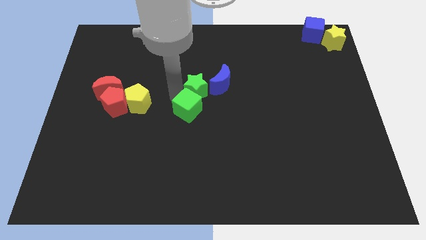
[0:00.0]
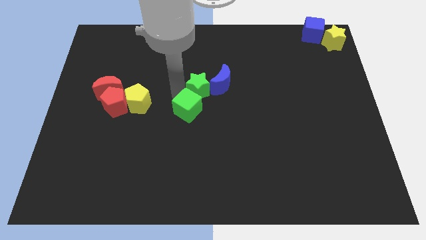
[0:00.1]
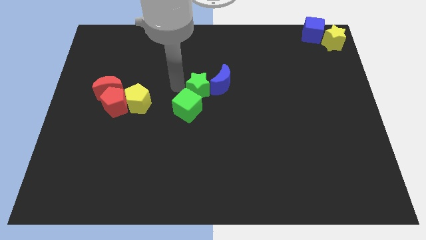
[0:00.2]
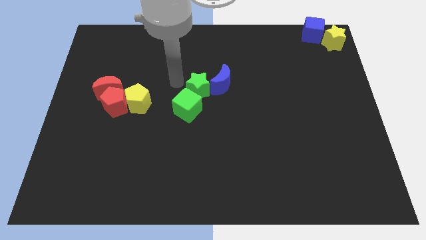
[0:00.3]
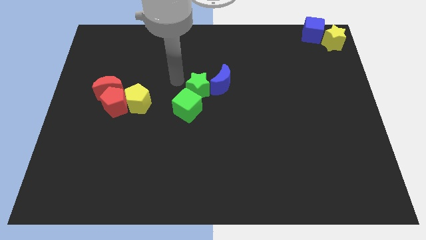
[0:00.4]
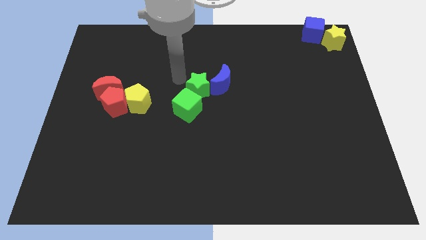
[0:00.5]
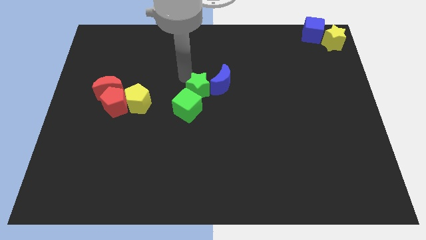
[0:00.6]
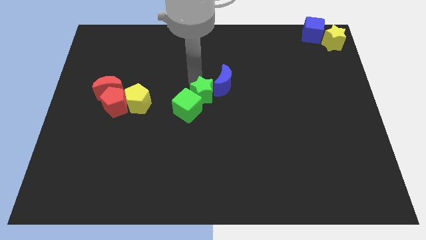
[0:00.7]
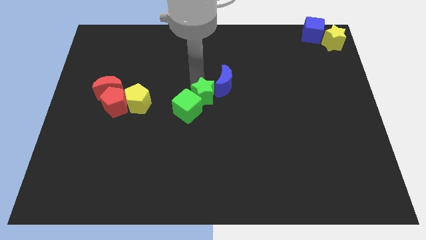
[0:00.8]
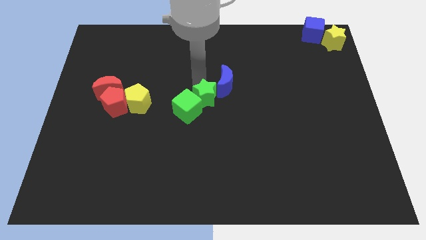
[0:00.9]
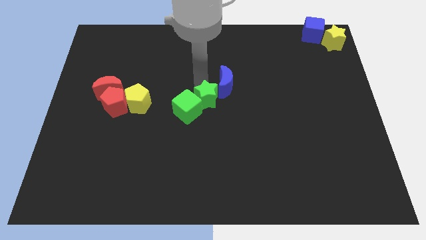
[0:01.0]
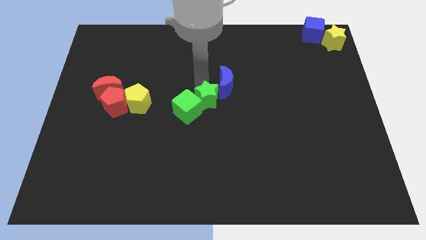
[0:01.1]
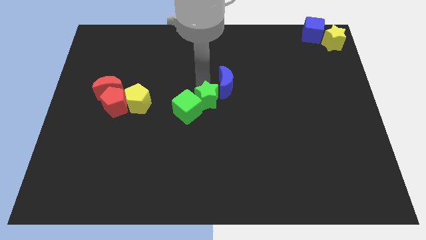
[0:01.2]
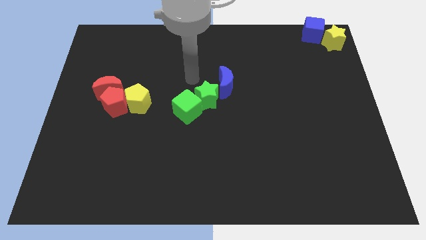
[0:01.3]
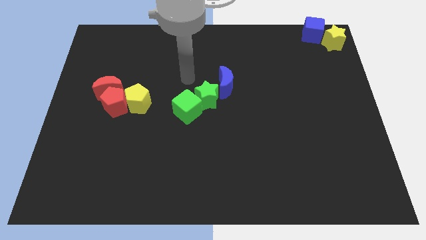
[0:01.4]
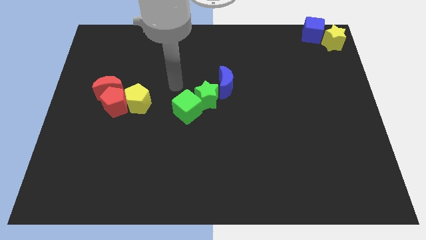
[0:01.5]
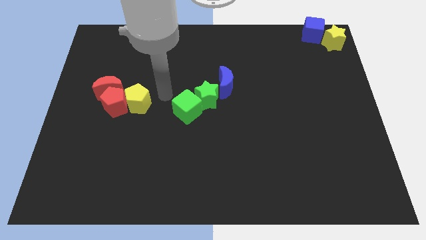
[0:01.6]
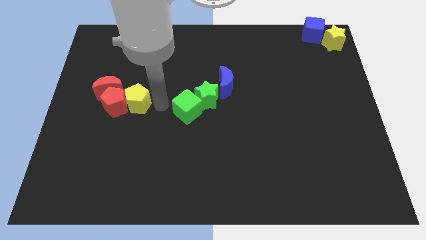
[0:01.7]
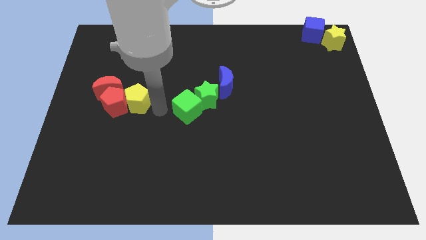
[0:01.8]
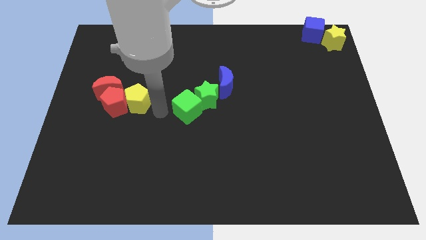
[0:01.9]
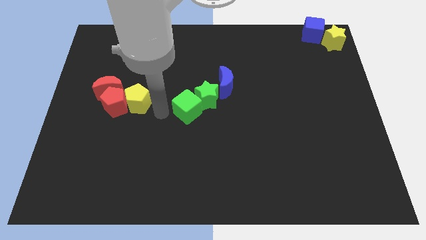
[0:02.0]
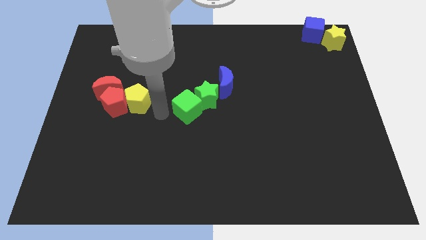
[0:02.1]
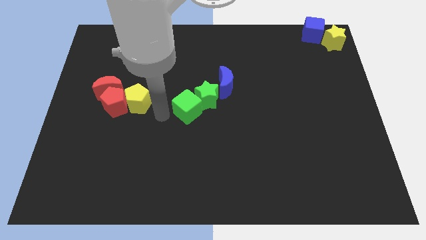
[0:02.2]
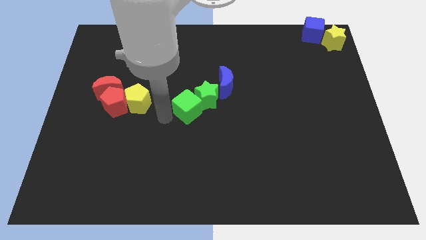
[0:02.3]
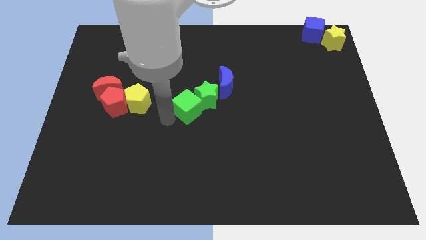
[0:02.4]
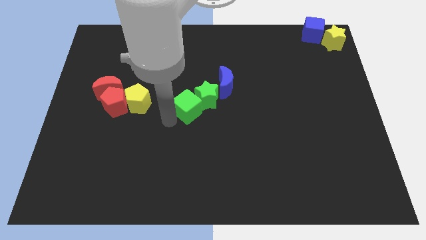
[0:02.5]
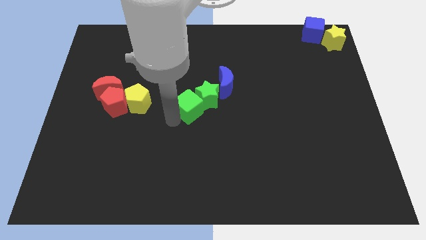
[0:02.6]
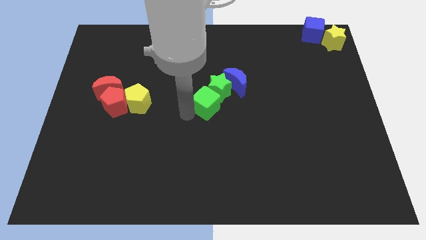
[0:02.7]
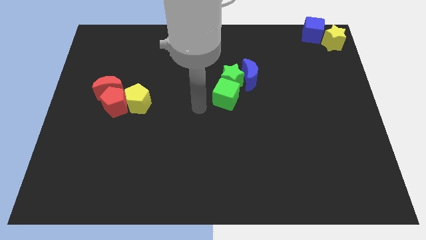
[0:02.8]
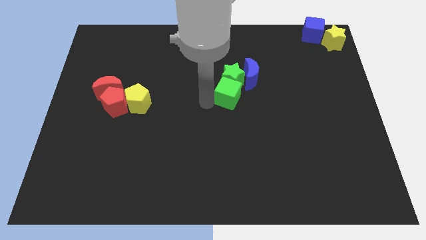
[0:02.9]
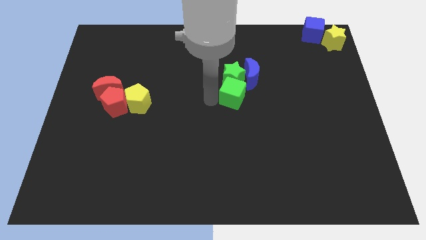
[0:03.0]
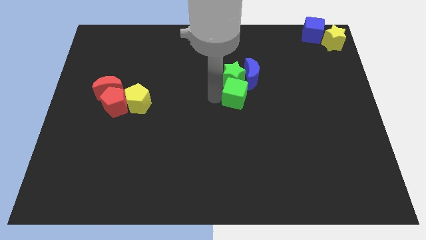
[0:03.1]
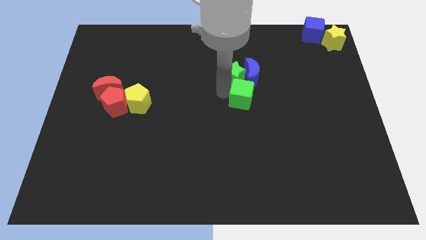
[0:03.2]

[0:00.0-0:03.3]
push the green blocks into the blue moon

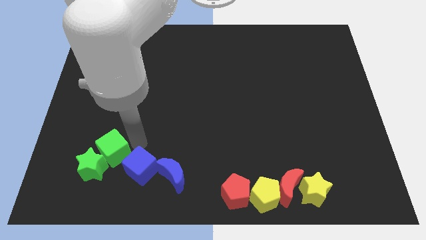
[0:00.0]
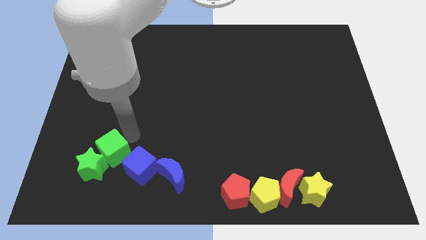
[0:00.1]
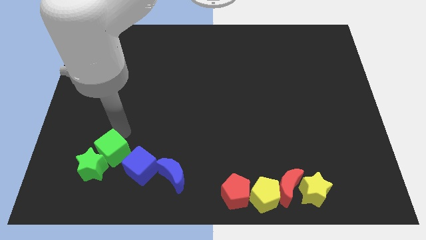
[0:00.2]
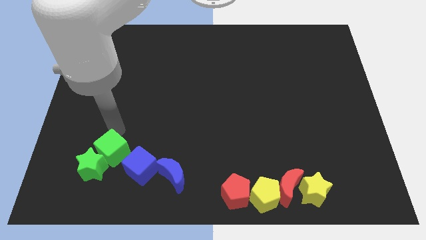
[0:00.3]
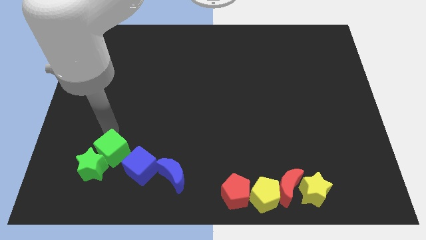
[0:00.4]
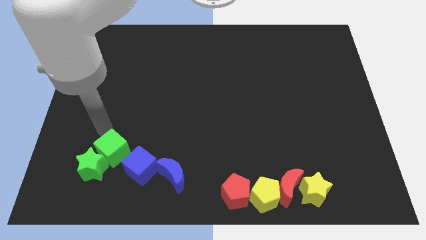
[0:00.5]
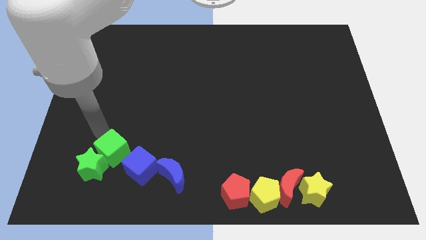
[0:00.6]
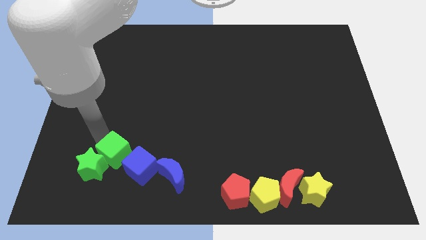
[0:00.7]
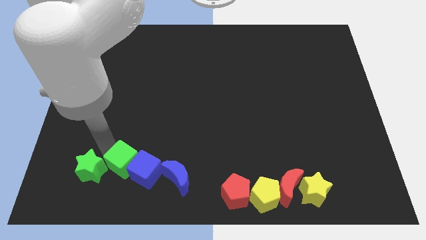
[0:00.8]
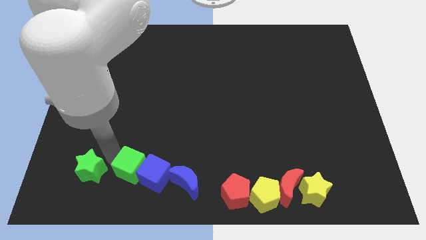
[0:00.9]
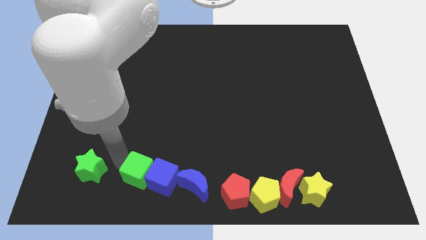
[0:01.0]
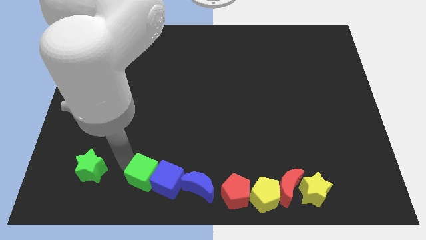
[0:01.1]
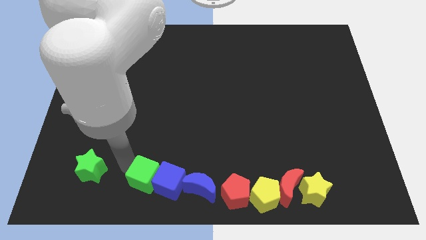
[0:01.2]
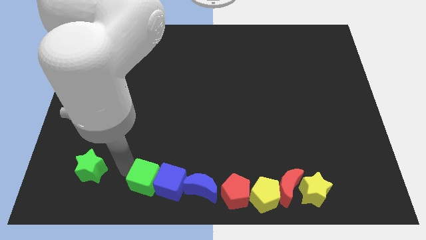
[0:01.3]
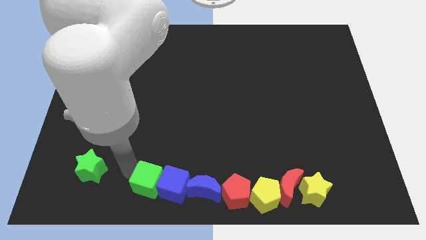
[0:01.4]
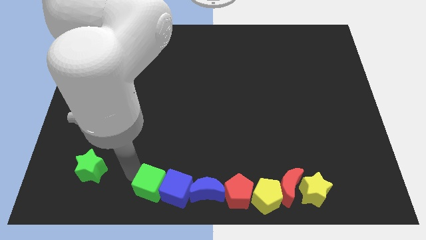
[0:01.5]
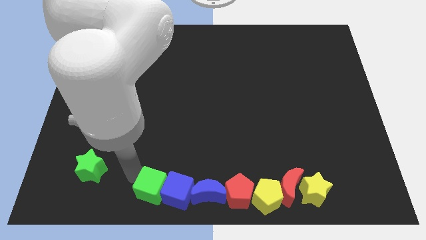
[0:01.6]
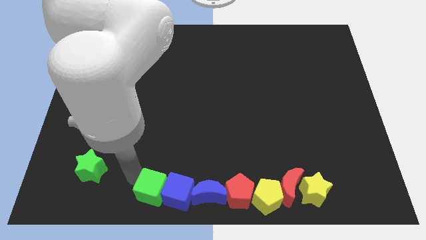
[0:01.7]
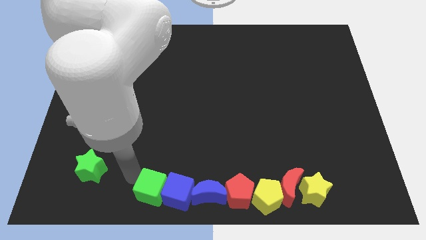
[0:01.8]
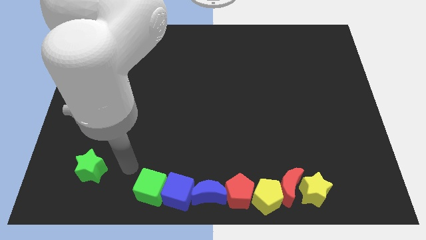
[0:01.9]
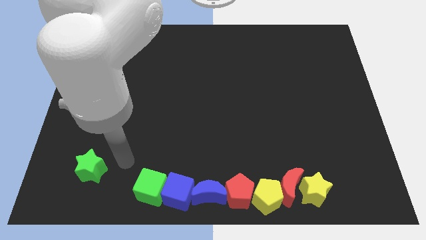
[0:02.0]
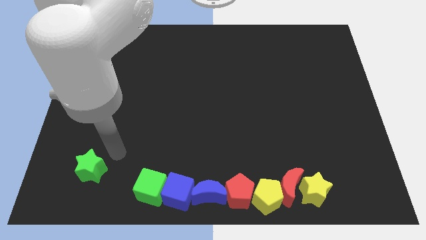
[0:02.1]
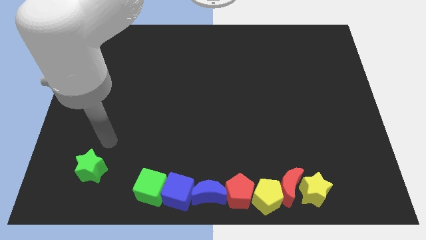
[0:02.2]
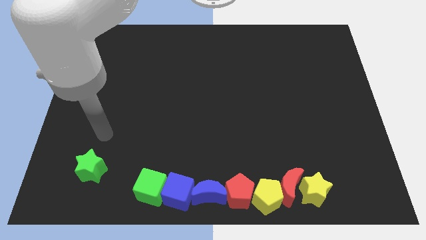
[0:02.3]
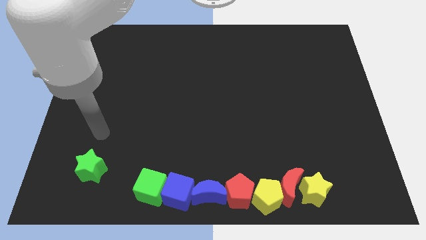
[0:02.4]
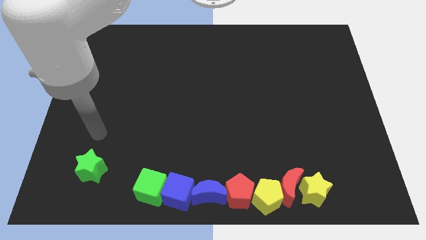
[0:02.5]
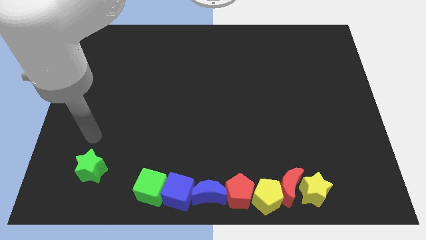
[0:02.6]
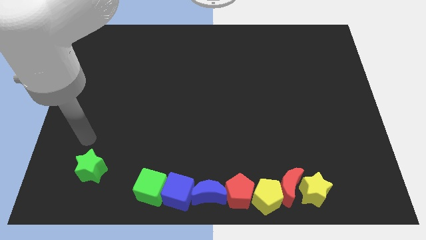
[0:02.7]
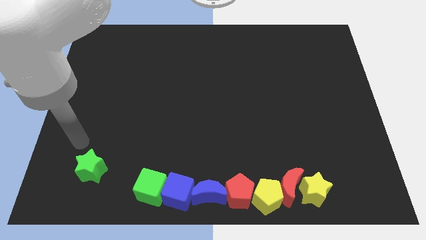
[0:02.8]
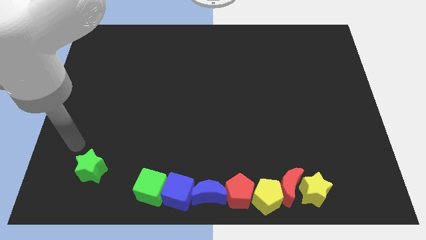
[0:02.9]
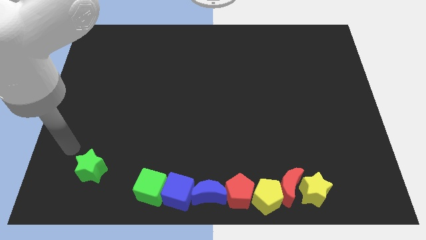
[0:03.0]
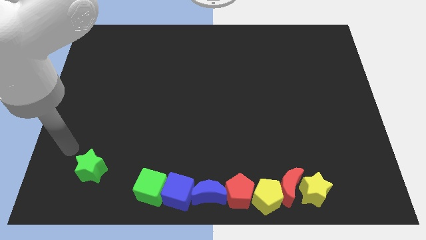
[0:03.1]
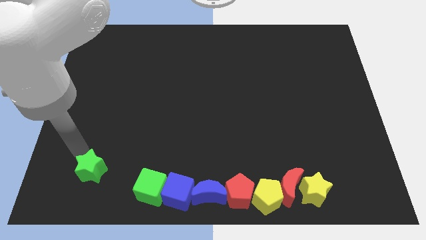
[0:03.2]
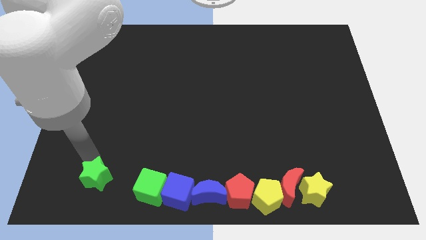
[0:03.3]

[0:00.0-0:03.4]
move the green cube and the blue blocks to the line of yellow and red blocks to form a line at the bottom

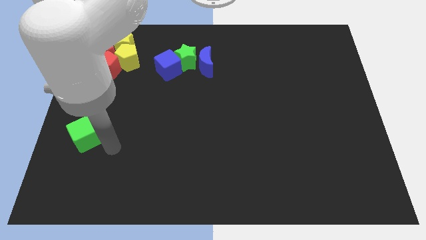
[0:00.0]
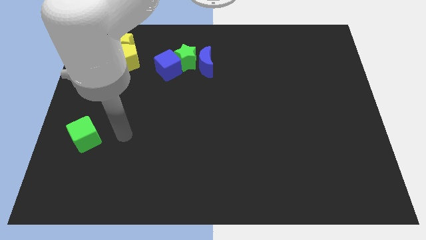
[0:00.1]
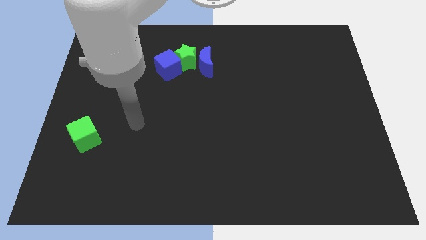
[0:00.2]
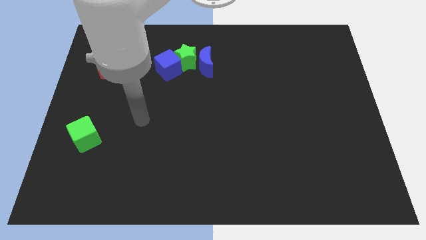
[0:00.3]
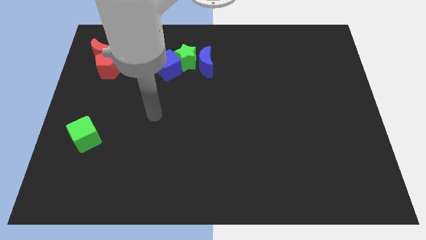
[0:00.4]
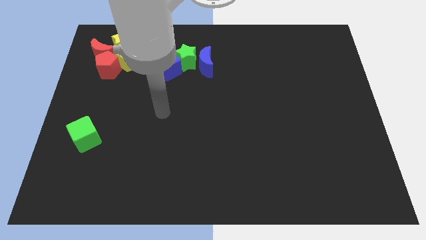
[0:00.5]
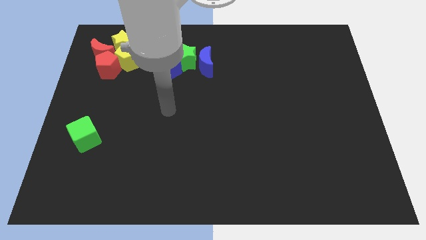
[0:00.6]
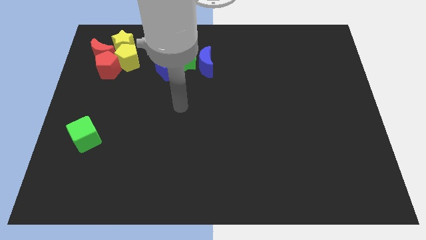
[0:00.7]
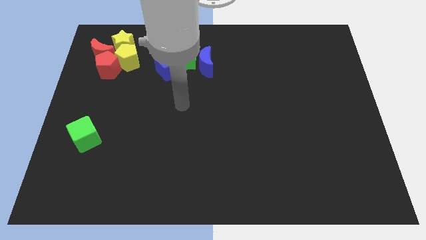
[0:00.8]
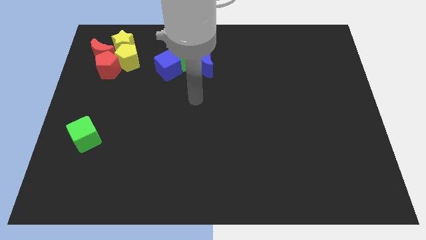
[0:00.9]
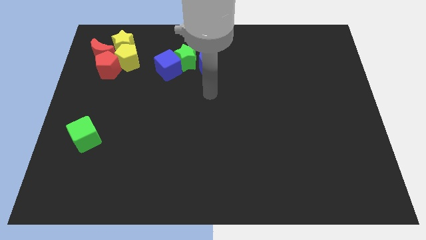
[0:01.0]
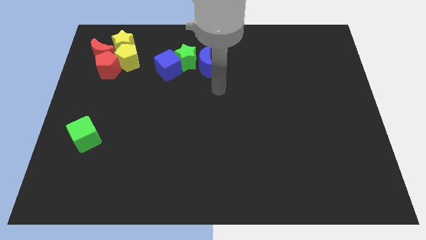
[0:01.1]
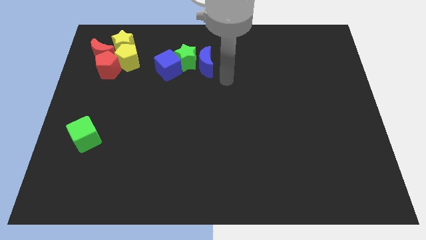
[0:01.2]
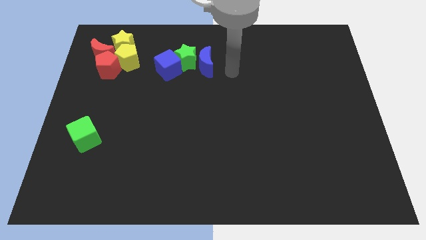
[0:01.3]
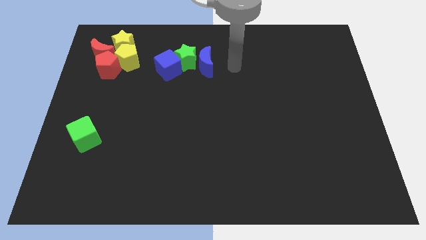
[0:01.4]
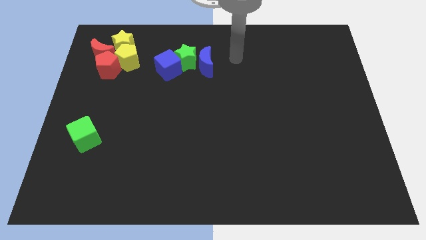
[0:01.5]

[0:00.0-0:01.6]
push your arm at the right side of the blue crescent

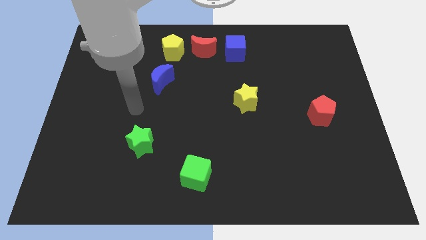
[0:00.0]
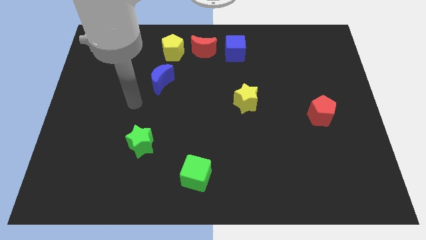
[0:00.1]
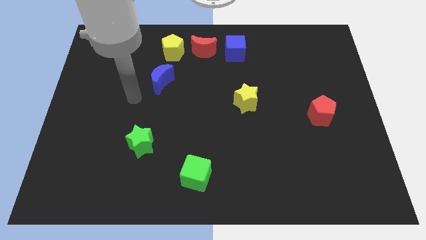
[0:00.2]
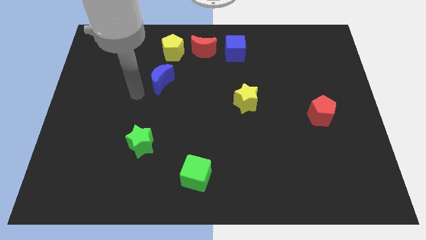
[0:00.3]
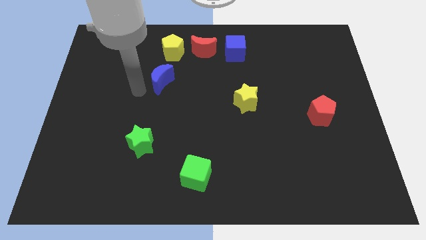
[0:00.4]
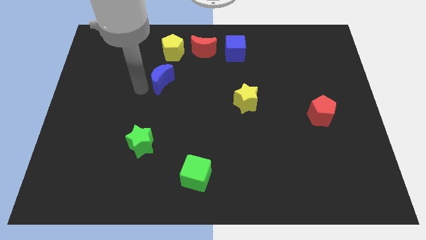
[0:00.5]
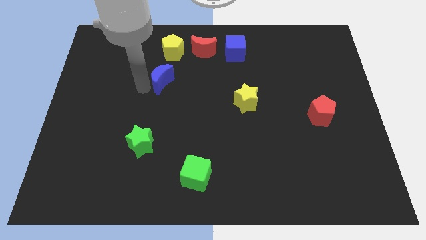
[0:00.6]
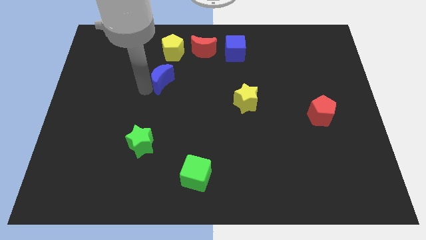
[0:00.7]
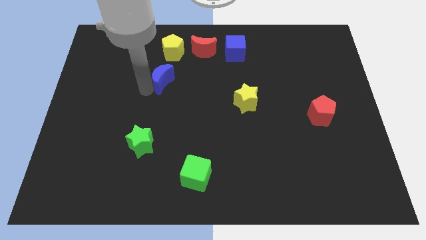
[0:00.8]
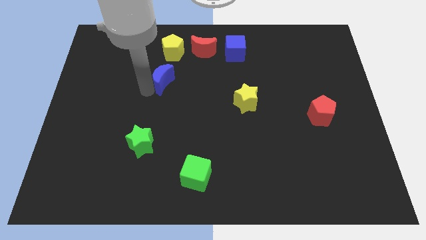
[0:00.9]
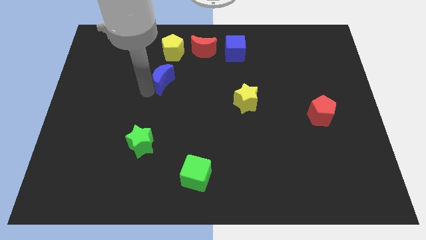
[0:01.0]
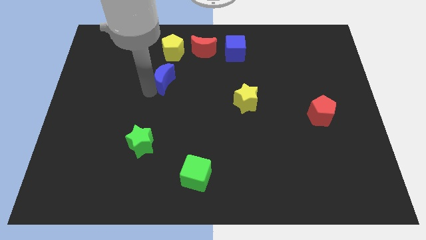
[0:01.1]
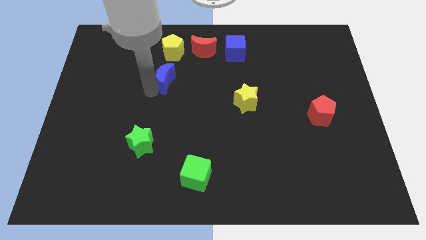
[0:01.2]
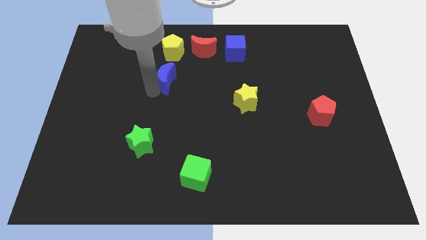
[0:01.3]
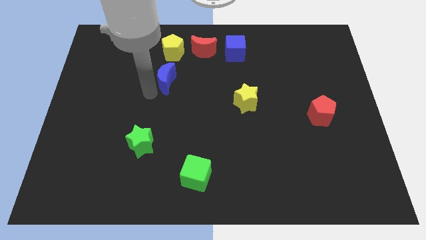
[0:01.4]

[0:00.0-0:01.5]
move blue crescent vertically below yellow pentagon
